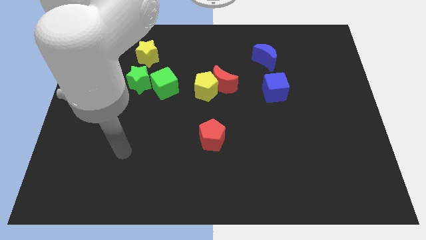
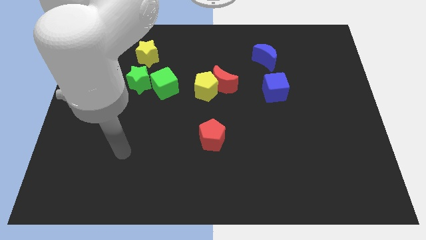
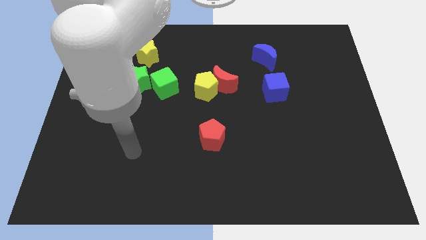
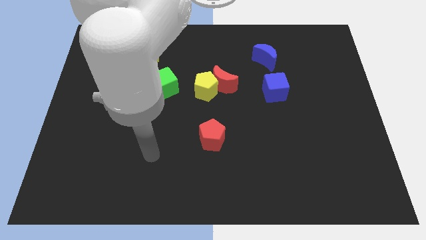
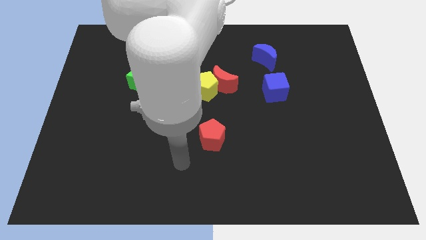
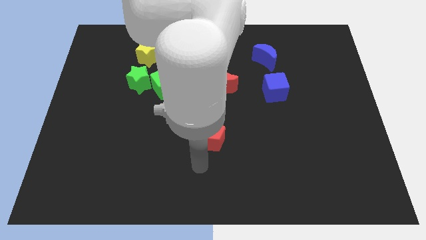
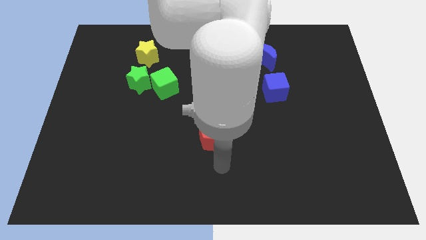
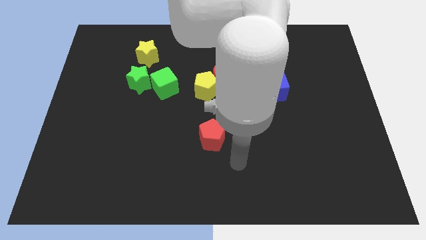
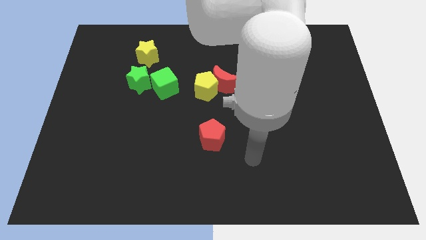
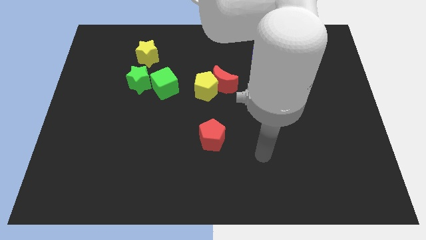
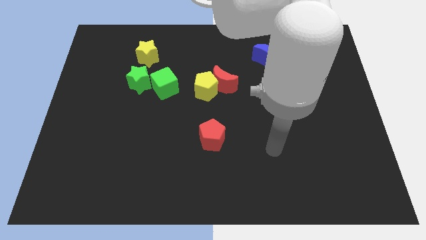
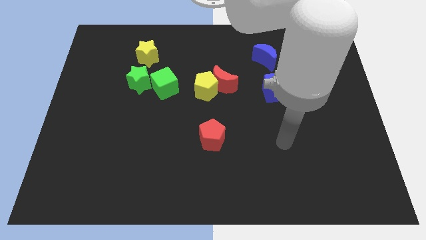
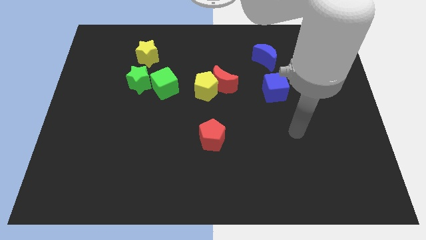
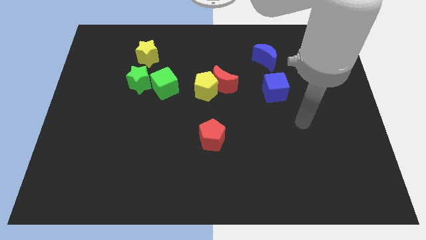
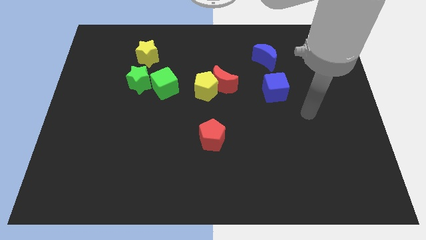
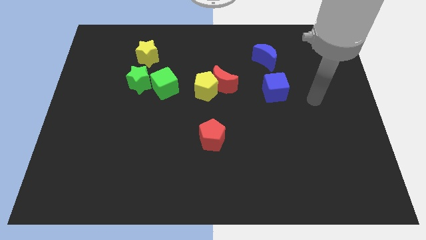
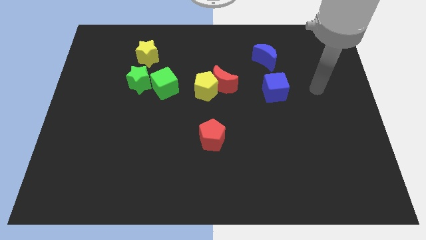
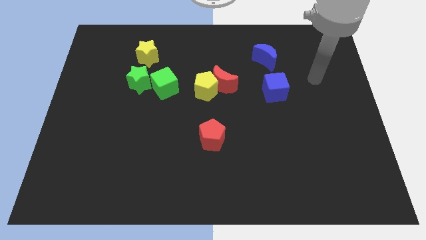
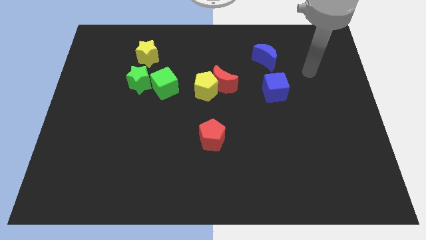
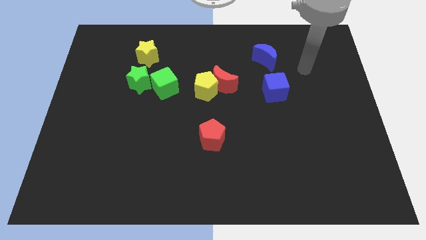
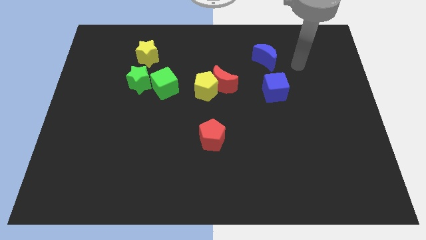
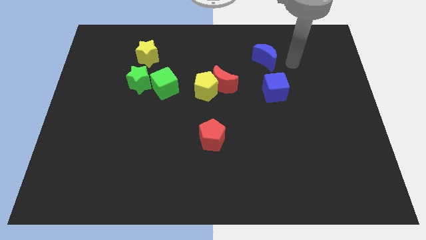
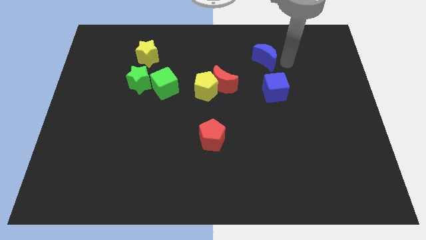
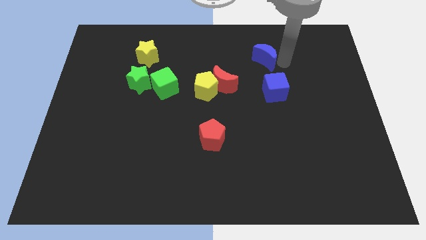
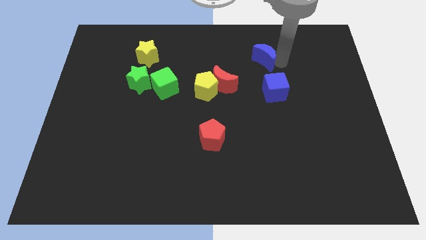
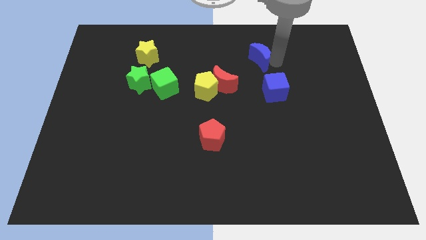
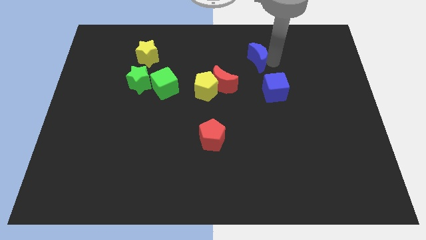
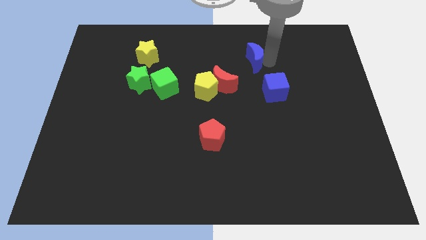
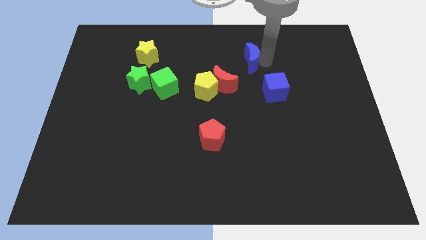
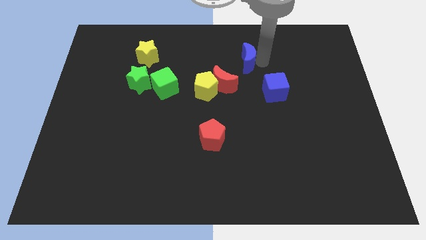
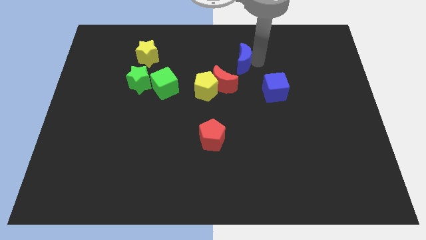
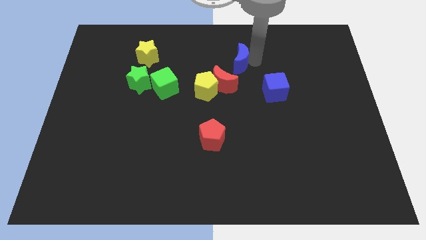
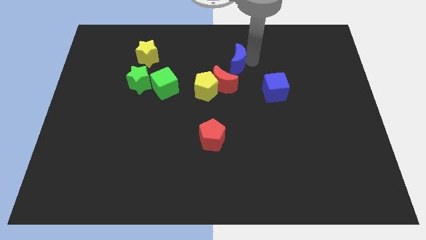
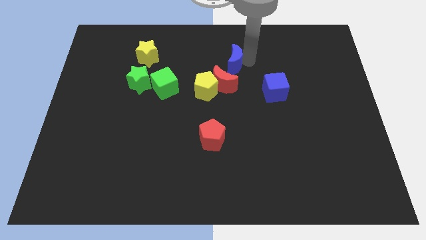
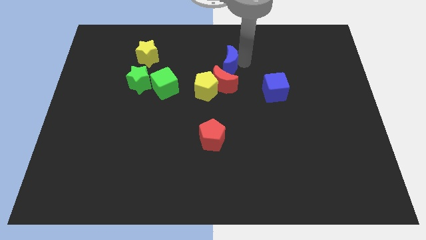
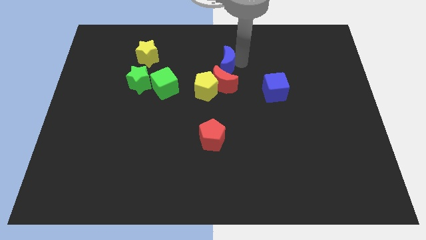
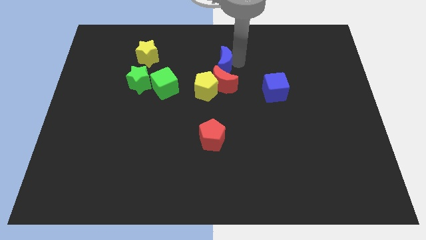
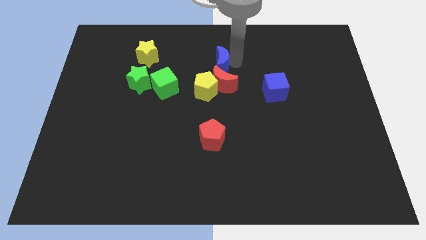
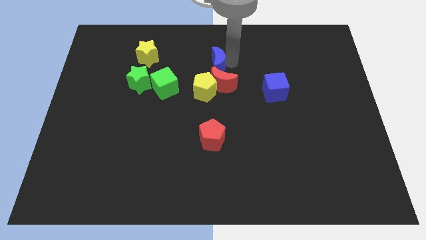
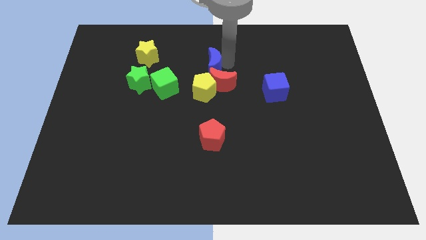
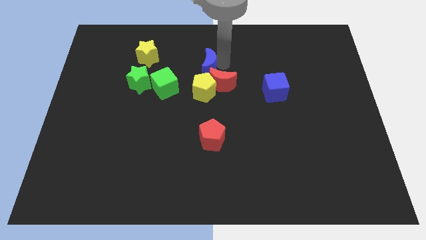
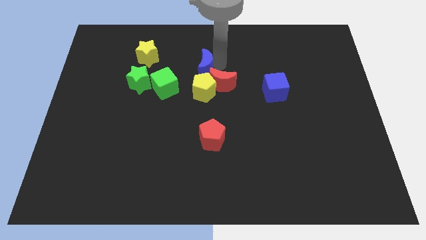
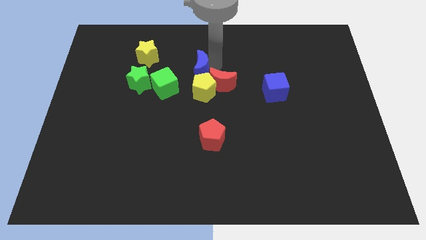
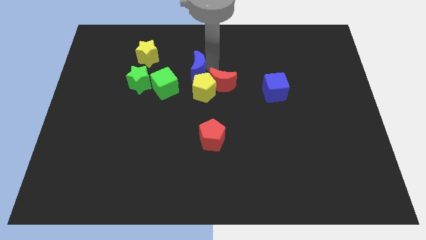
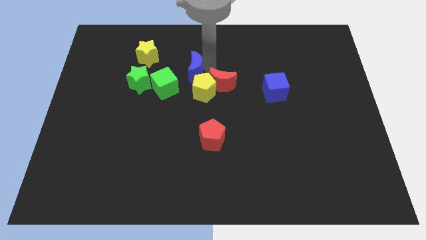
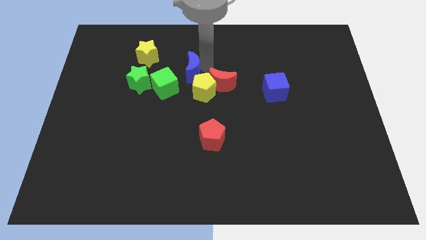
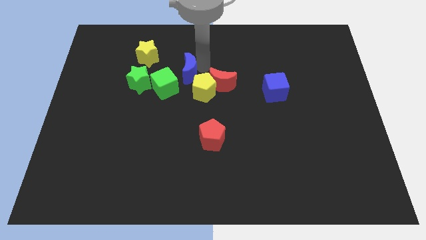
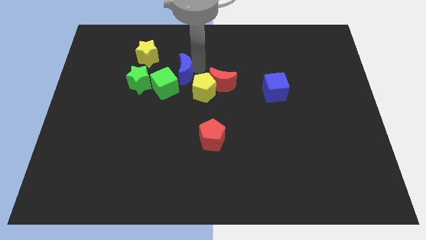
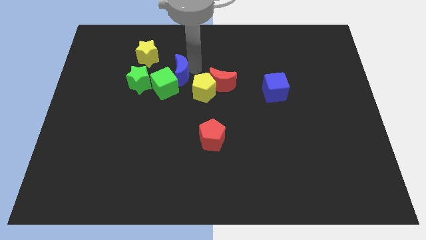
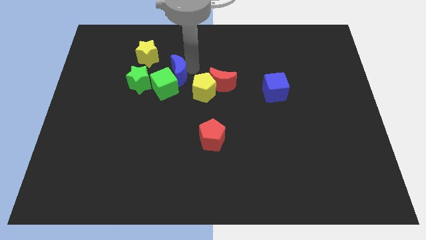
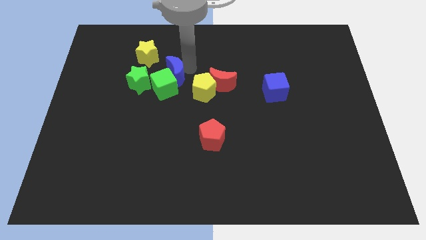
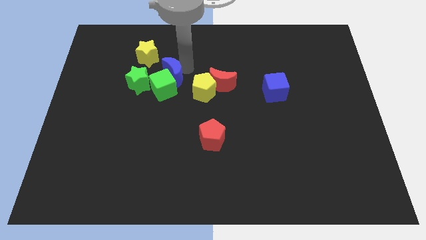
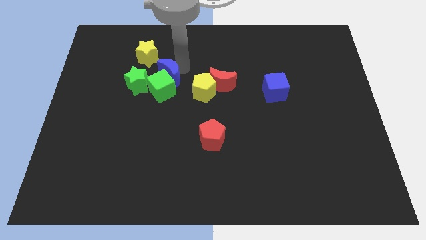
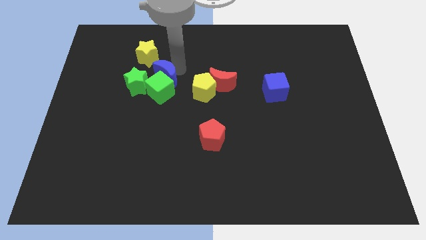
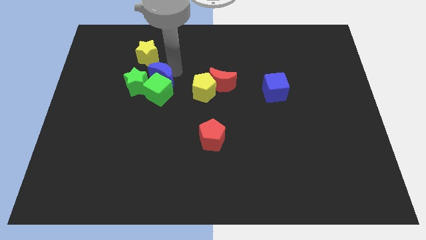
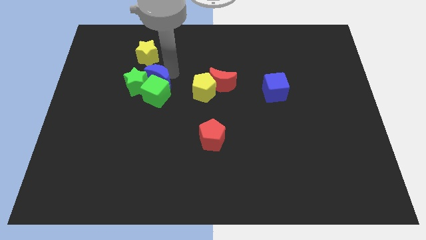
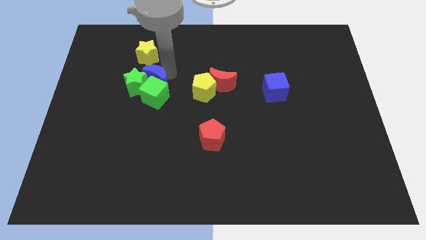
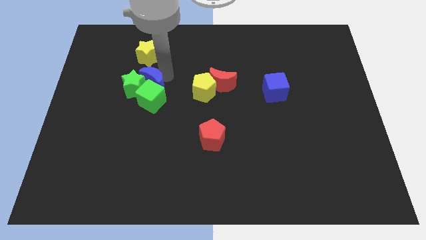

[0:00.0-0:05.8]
move the blue moon to the green star

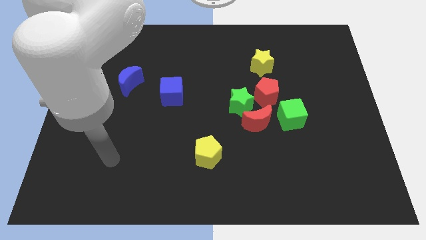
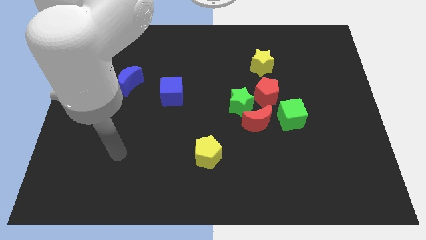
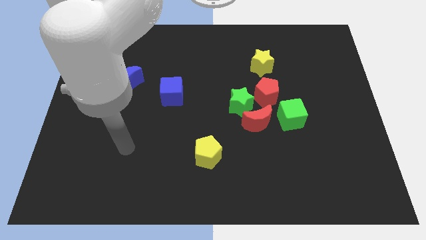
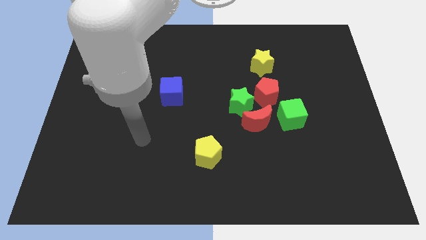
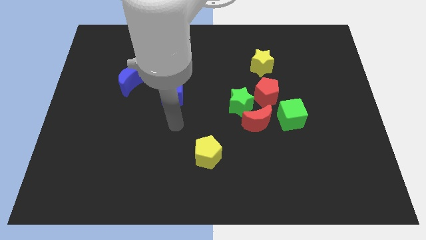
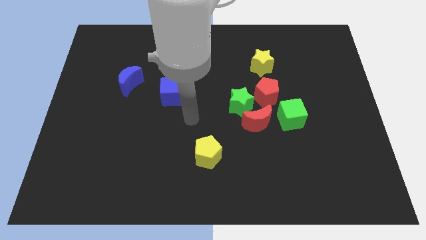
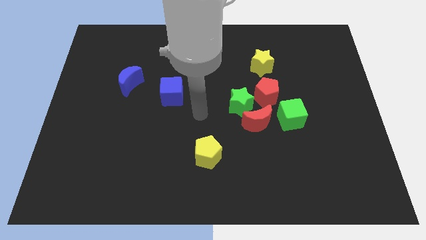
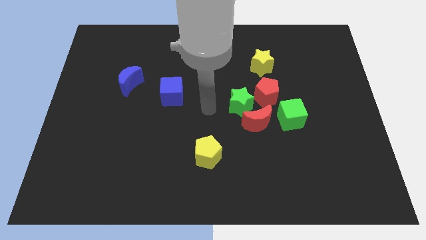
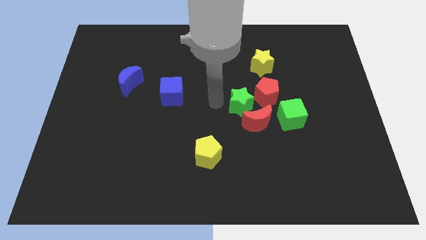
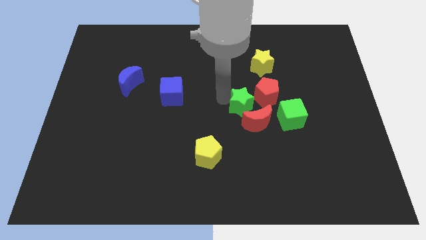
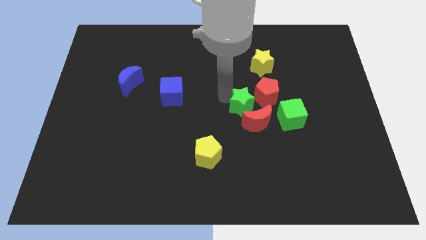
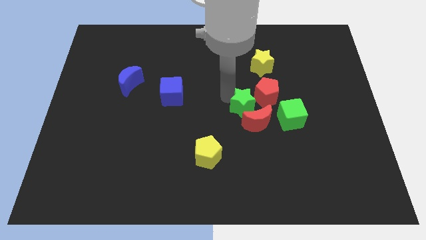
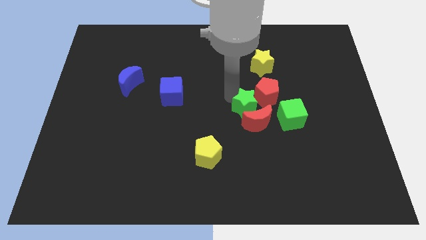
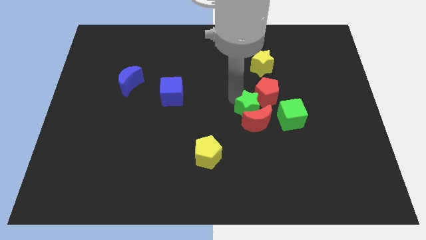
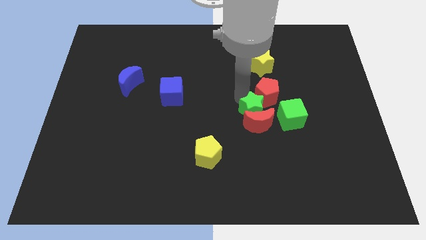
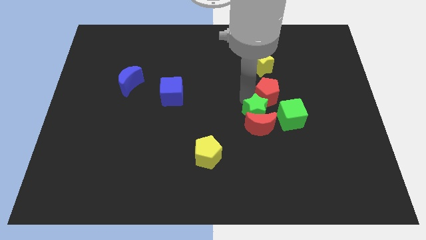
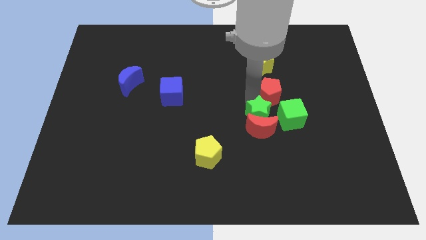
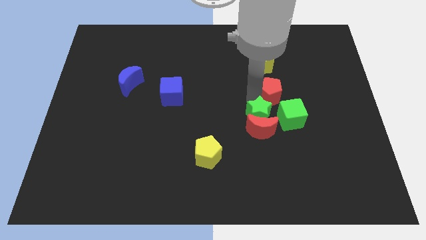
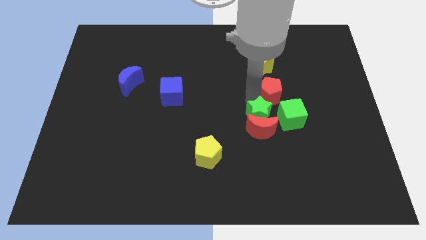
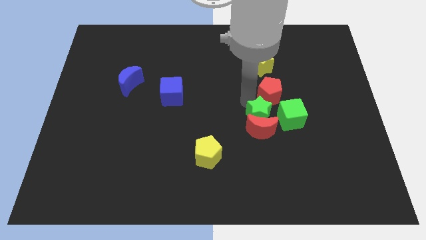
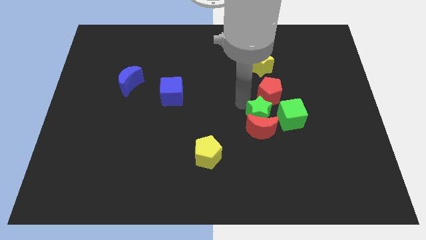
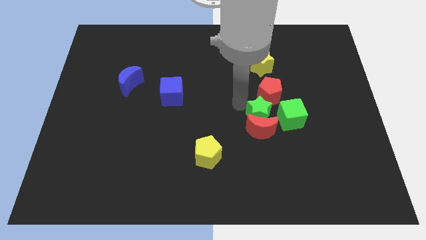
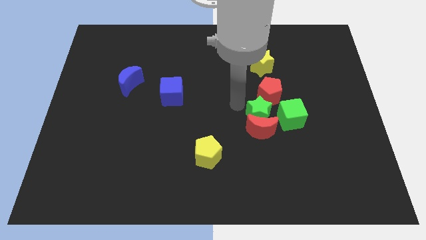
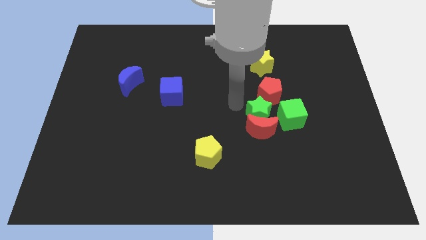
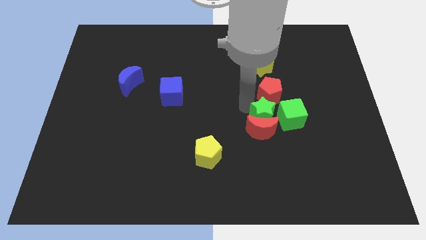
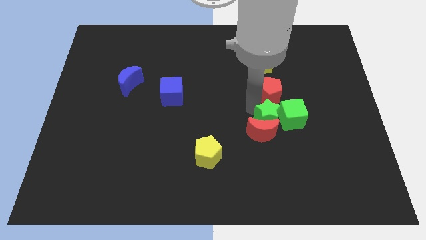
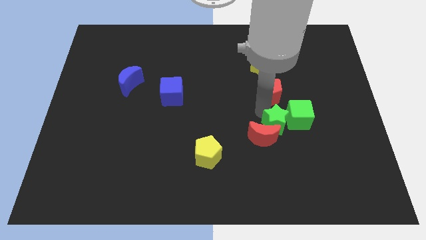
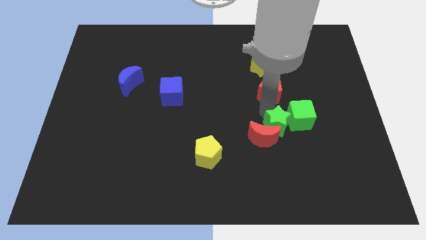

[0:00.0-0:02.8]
slide the green star towards the green cube
